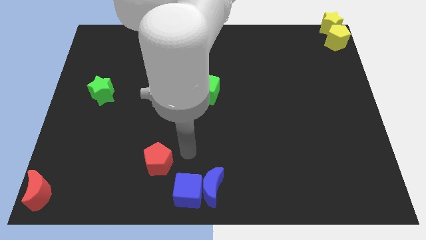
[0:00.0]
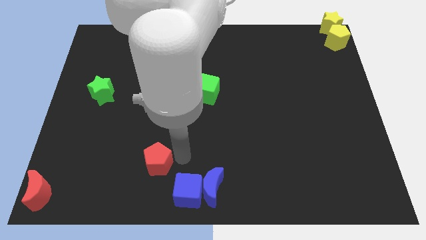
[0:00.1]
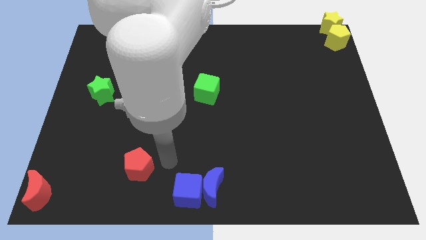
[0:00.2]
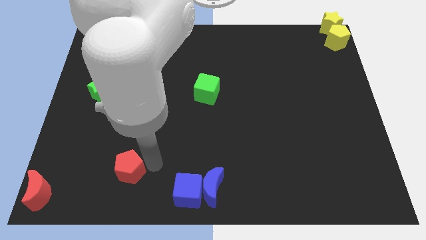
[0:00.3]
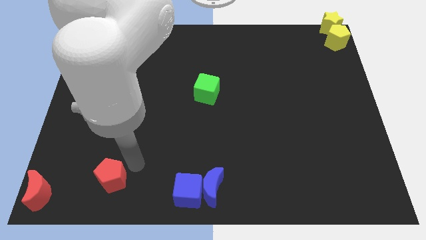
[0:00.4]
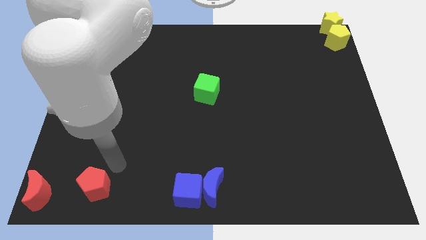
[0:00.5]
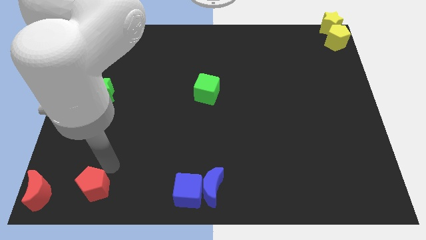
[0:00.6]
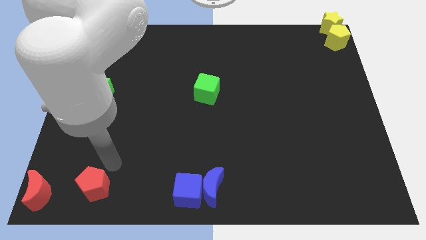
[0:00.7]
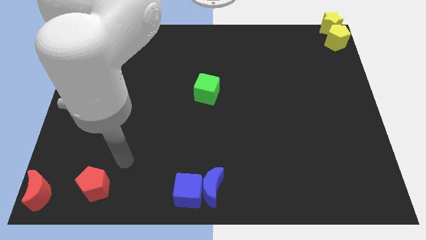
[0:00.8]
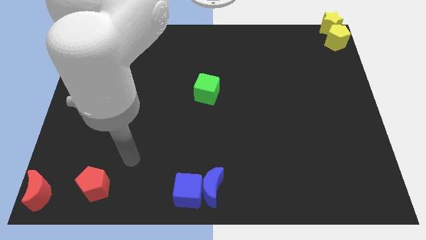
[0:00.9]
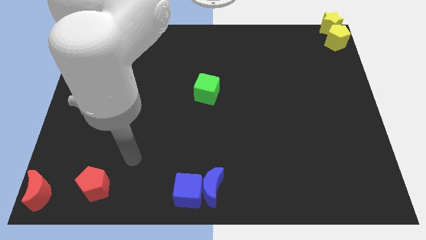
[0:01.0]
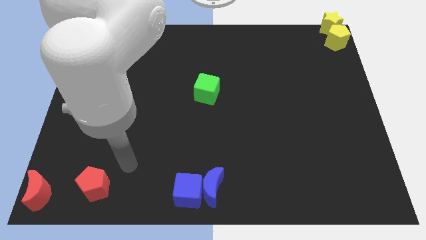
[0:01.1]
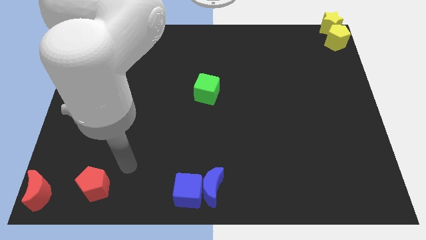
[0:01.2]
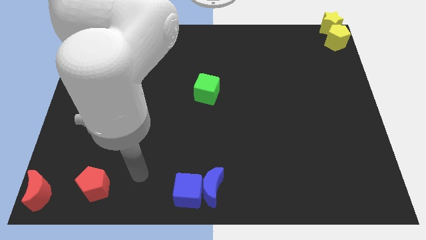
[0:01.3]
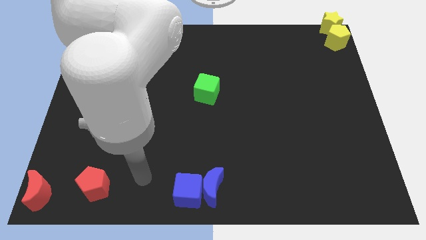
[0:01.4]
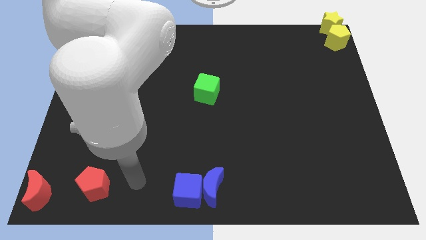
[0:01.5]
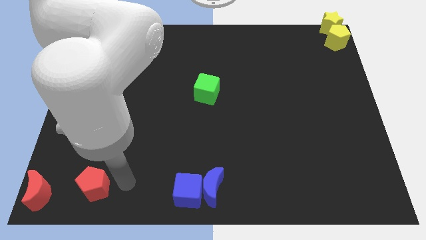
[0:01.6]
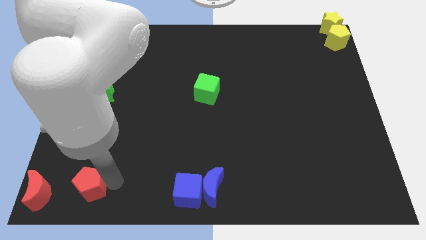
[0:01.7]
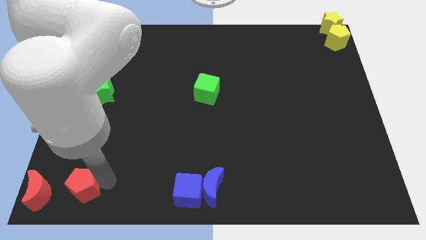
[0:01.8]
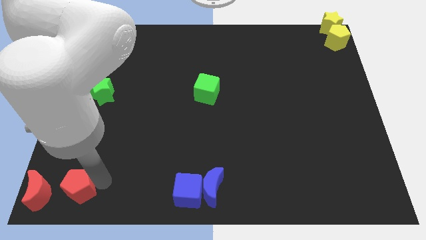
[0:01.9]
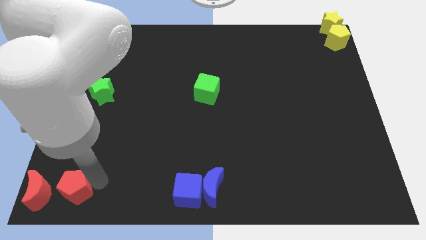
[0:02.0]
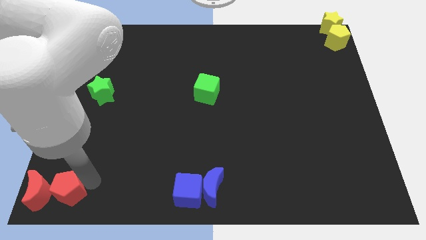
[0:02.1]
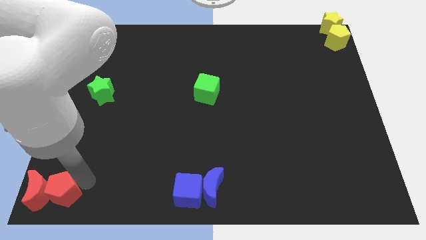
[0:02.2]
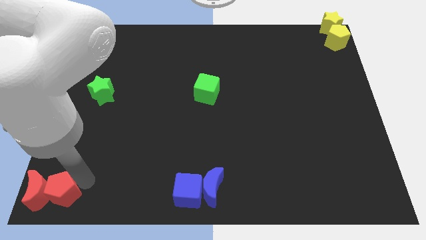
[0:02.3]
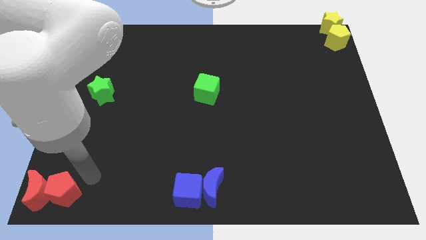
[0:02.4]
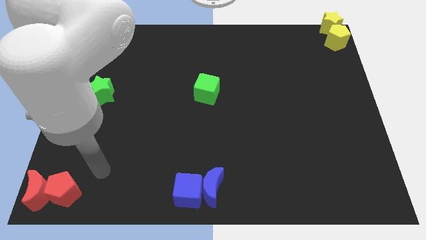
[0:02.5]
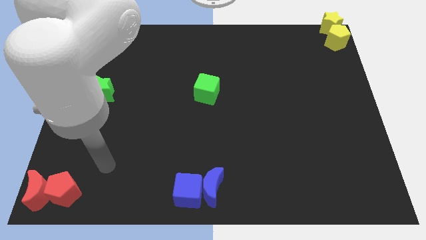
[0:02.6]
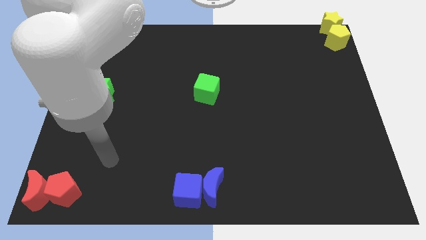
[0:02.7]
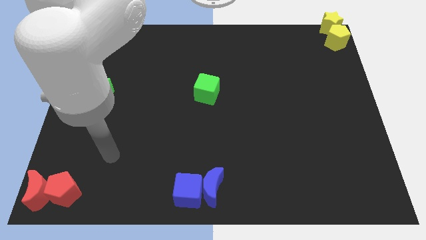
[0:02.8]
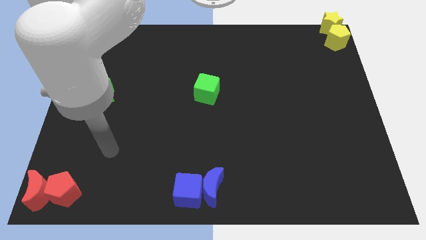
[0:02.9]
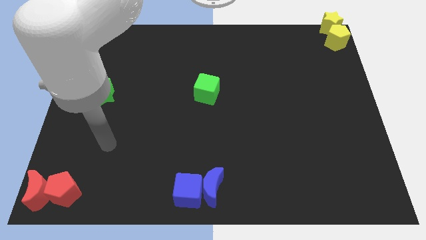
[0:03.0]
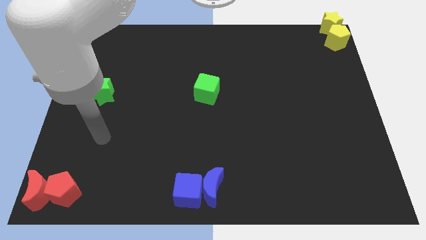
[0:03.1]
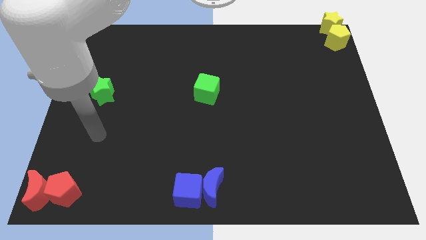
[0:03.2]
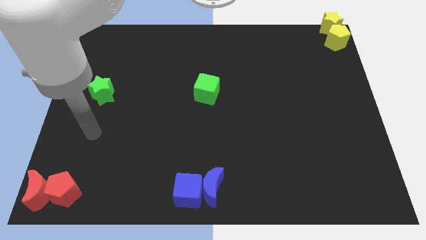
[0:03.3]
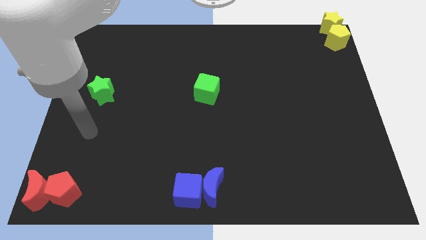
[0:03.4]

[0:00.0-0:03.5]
push the red penatgon close to red moon

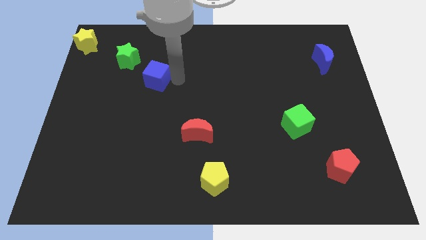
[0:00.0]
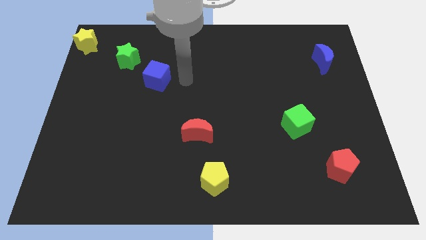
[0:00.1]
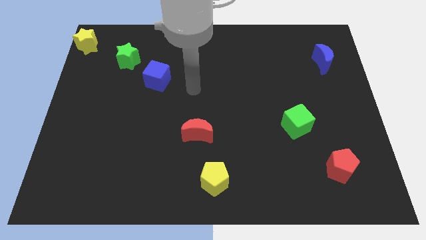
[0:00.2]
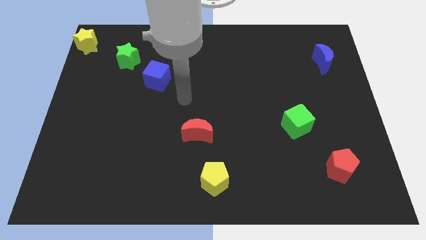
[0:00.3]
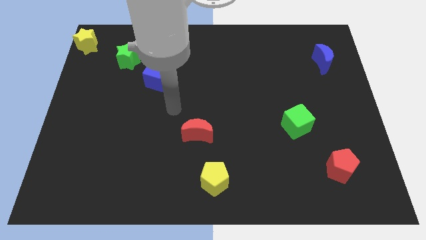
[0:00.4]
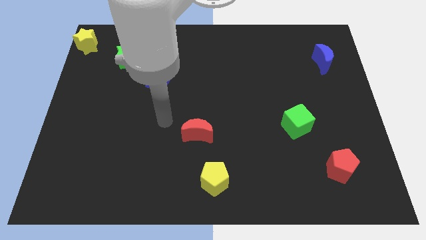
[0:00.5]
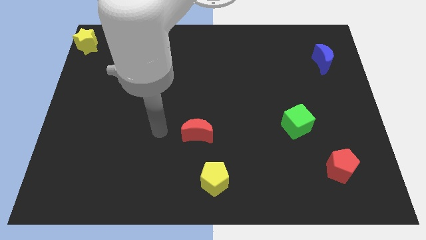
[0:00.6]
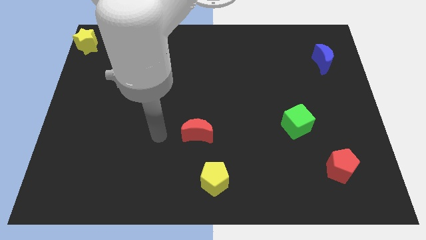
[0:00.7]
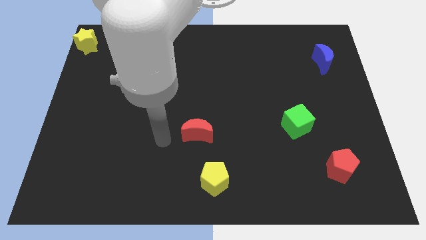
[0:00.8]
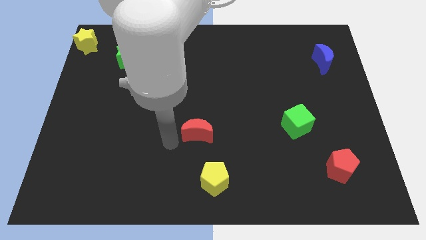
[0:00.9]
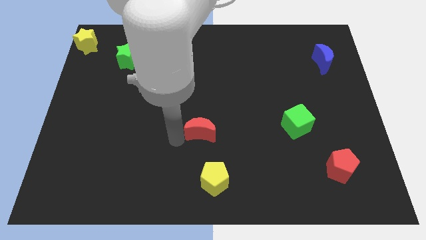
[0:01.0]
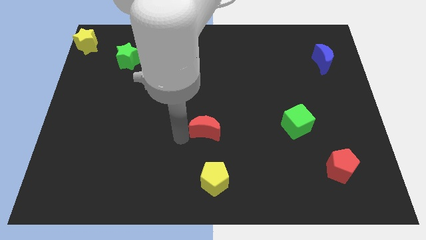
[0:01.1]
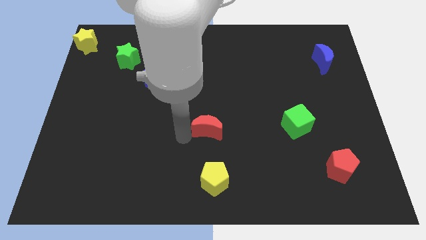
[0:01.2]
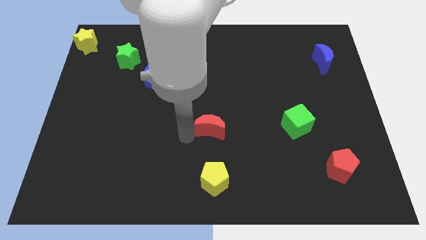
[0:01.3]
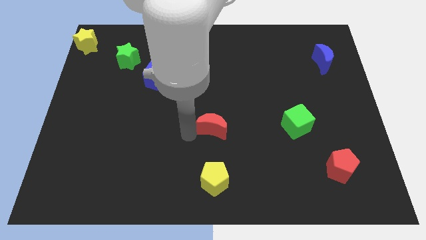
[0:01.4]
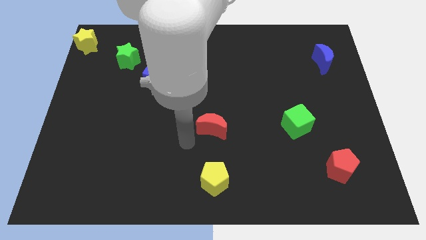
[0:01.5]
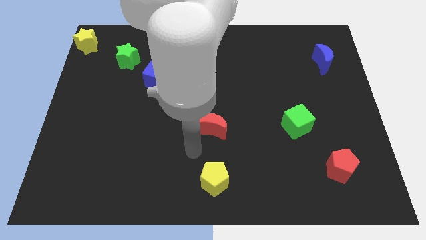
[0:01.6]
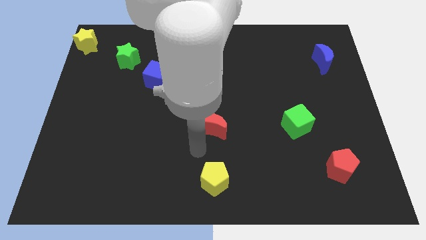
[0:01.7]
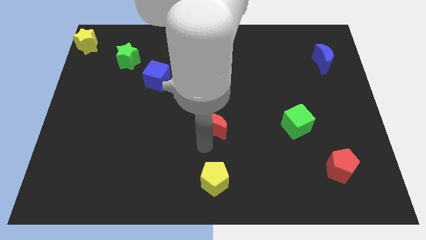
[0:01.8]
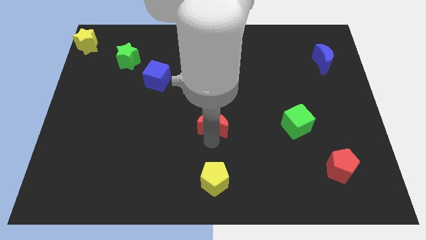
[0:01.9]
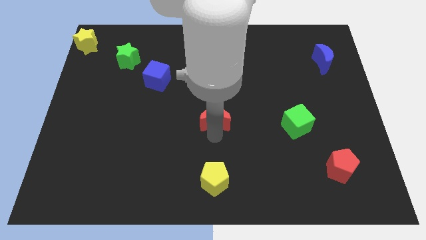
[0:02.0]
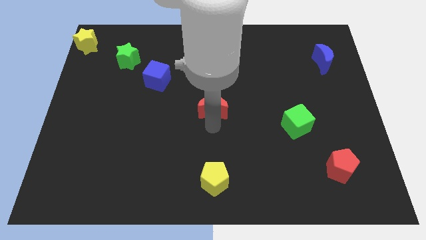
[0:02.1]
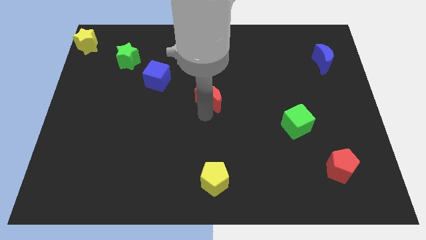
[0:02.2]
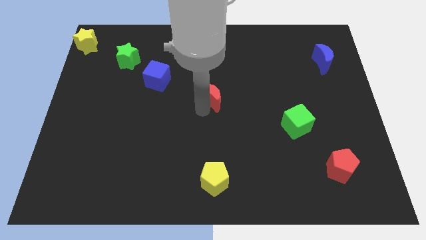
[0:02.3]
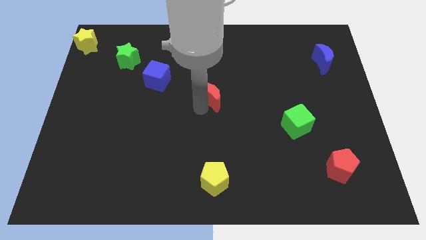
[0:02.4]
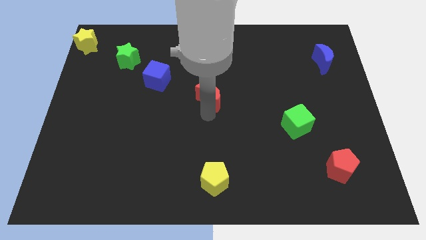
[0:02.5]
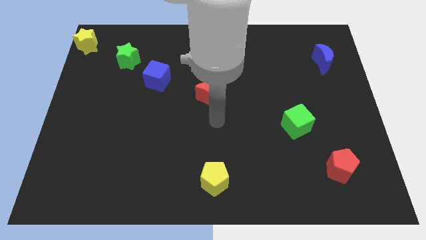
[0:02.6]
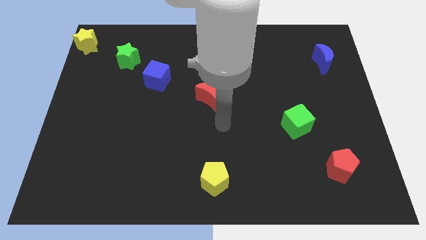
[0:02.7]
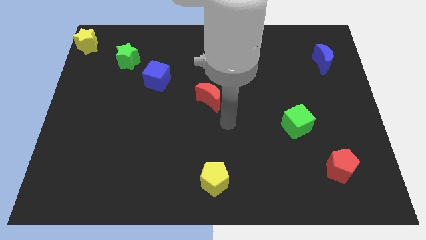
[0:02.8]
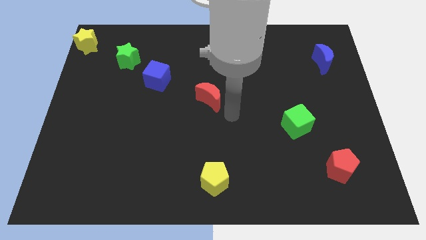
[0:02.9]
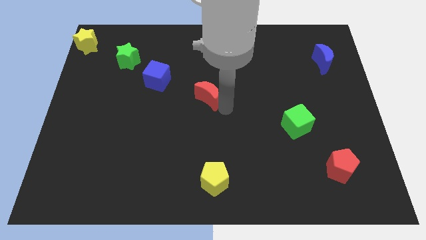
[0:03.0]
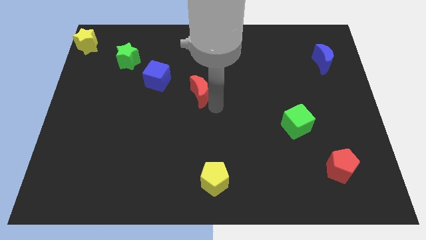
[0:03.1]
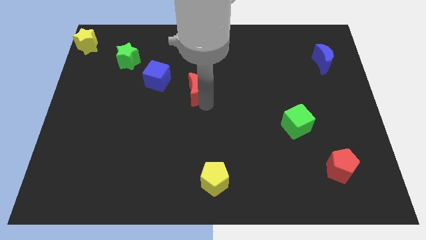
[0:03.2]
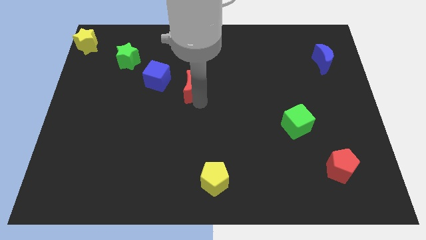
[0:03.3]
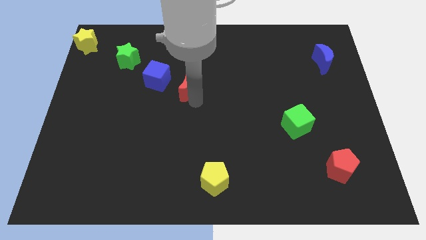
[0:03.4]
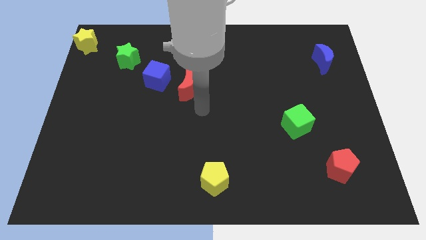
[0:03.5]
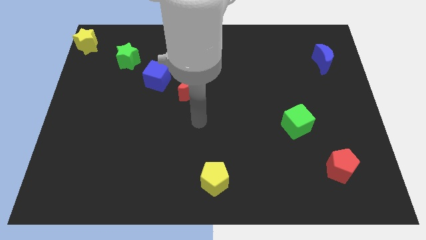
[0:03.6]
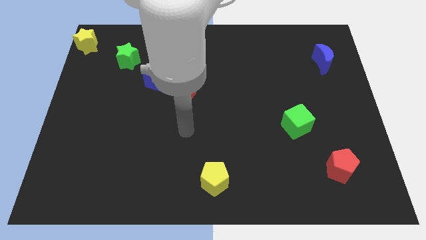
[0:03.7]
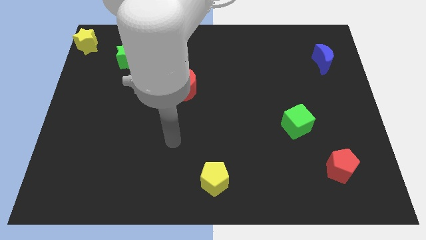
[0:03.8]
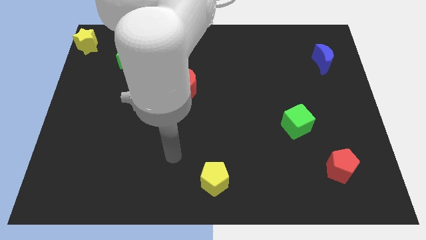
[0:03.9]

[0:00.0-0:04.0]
put the red crescent on the right side of the blue cube

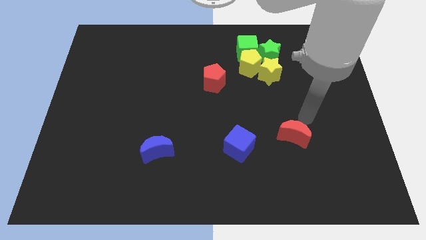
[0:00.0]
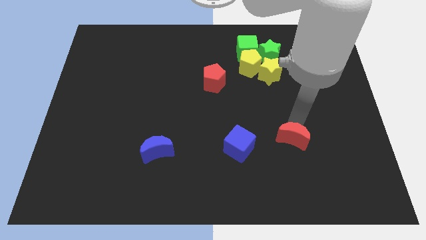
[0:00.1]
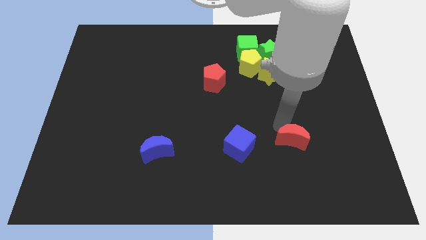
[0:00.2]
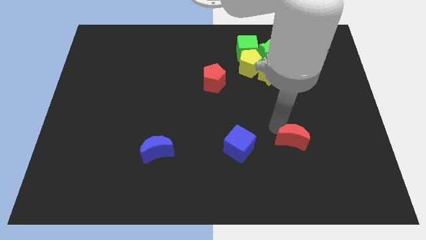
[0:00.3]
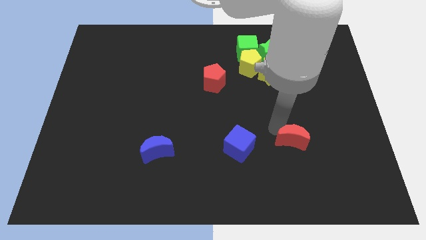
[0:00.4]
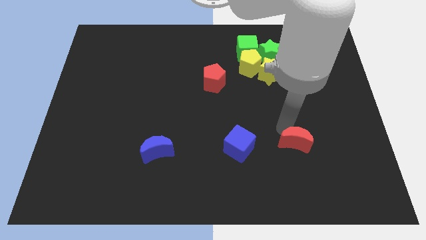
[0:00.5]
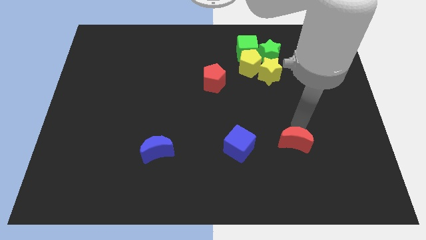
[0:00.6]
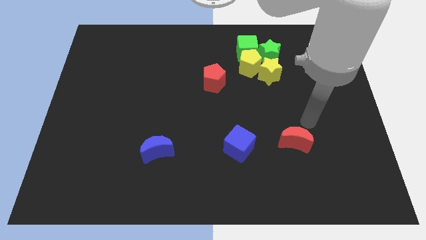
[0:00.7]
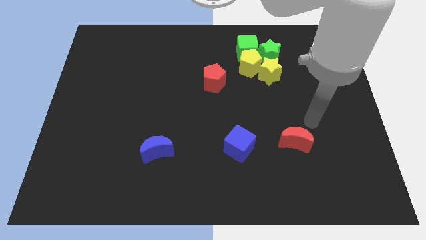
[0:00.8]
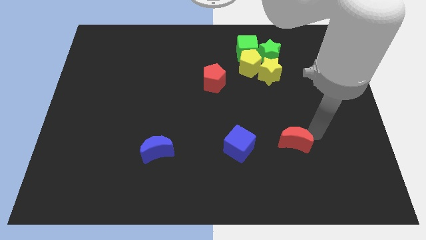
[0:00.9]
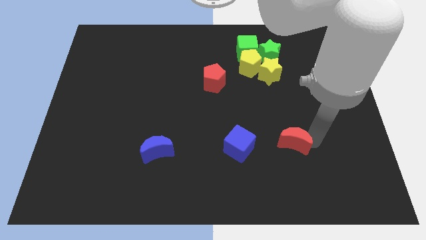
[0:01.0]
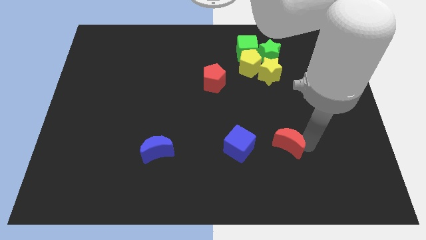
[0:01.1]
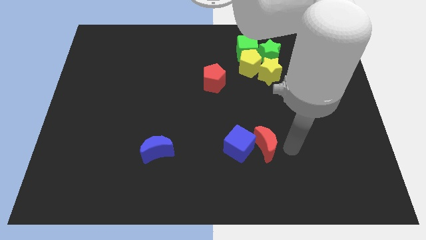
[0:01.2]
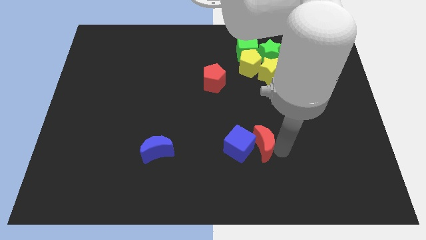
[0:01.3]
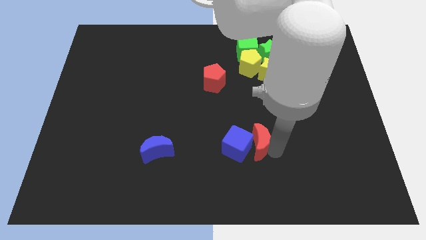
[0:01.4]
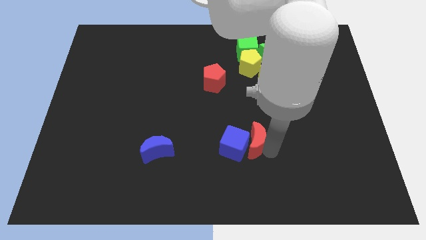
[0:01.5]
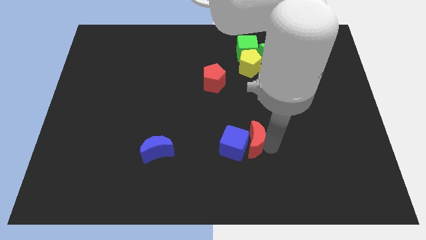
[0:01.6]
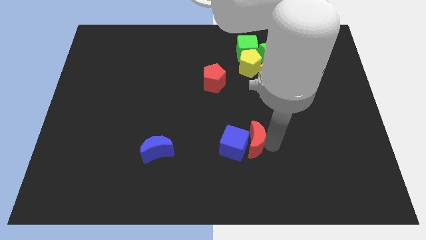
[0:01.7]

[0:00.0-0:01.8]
push the red moon into blue cube
